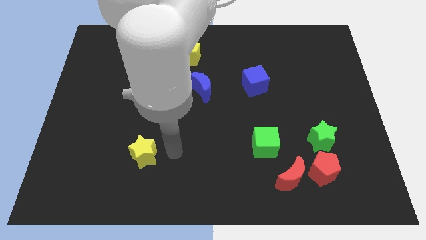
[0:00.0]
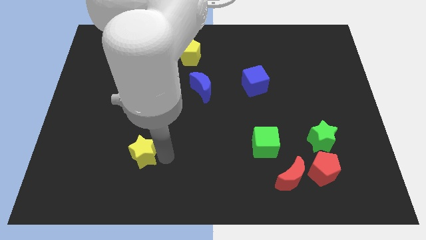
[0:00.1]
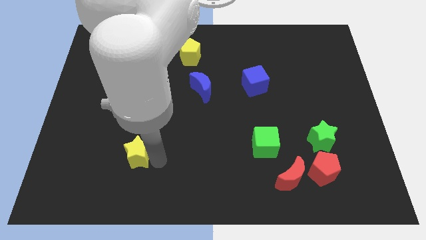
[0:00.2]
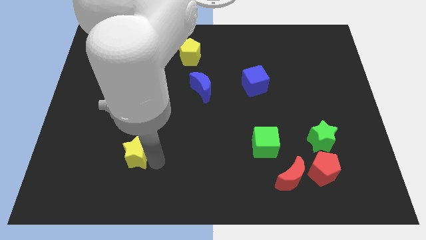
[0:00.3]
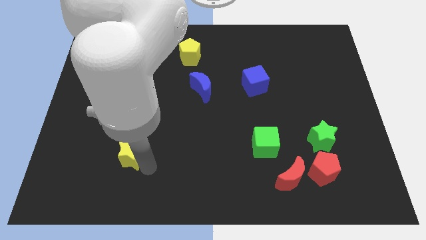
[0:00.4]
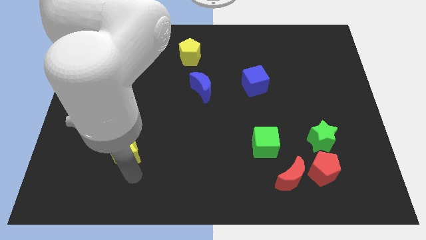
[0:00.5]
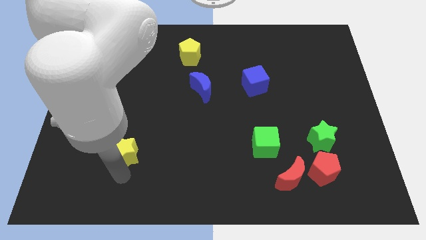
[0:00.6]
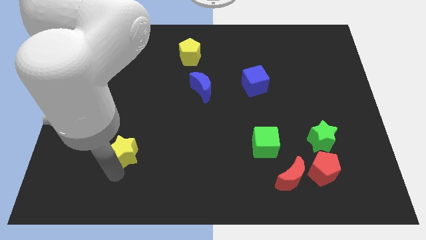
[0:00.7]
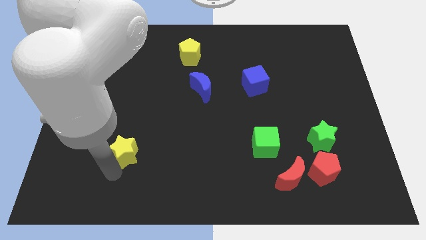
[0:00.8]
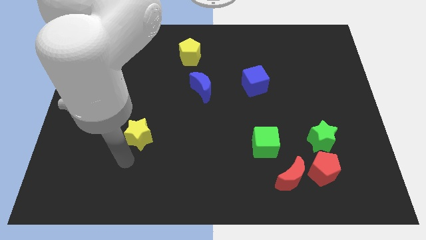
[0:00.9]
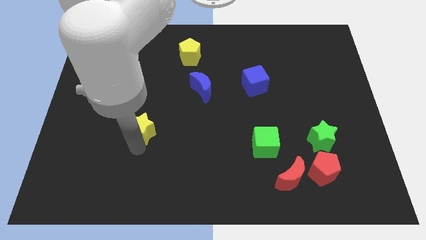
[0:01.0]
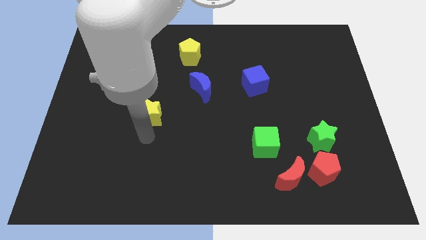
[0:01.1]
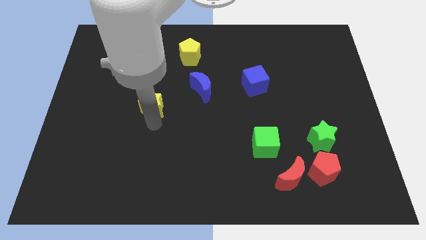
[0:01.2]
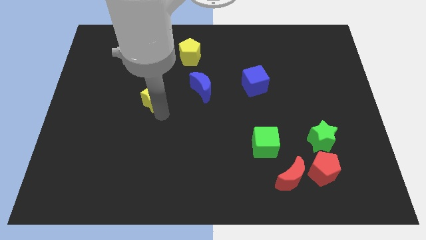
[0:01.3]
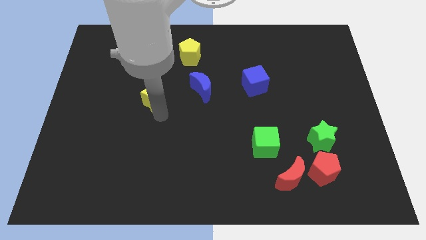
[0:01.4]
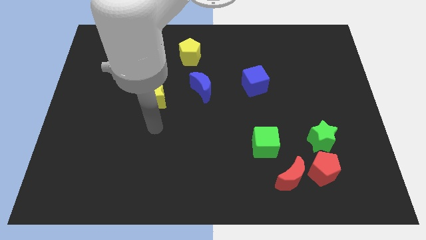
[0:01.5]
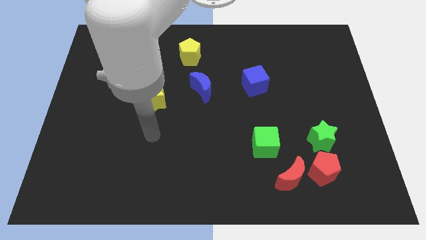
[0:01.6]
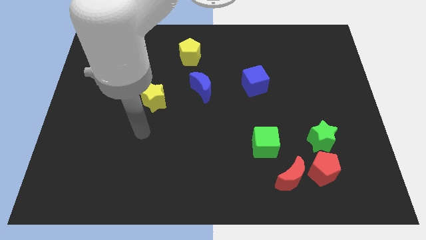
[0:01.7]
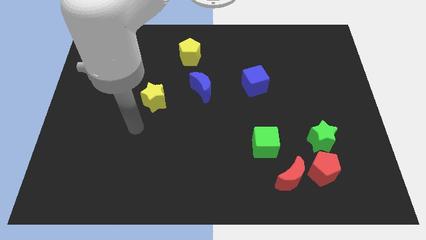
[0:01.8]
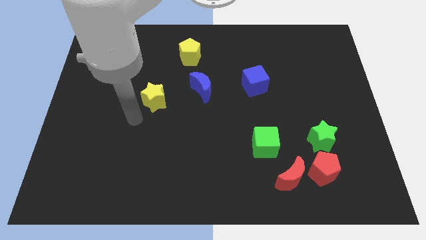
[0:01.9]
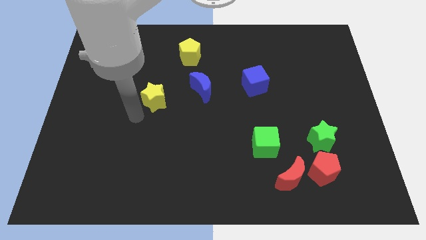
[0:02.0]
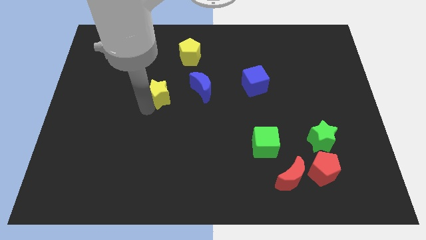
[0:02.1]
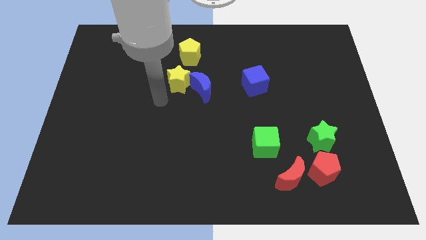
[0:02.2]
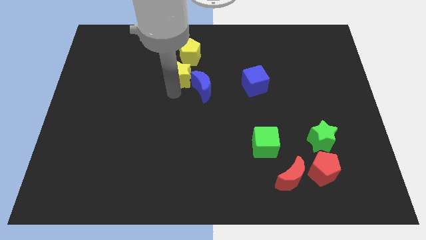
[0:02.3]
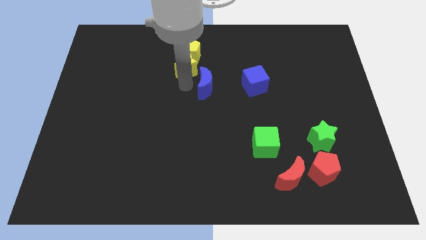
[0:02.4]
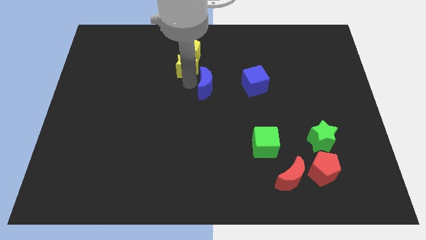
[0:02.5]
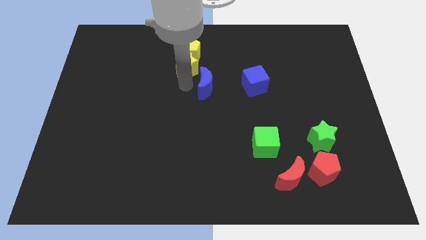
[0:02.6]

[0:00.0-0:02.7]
put the yellow star at the bottom of the yellow pentagon

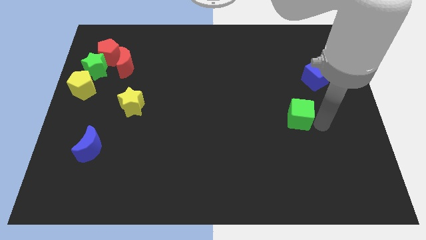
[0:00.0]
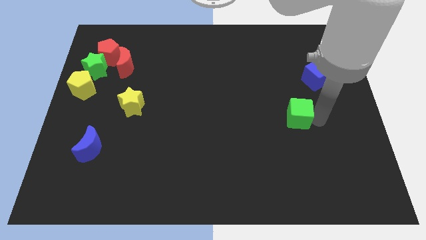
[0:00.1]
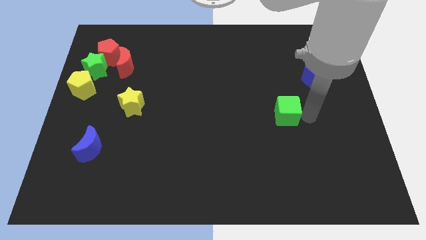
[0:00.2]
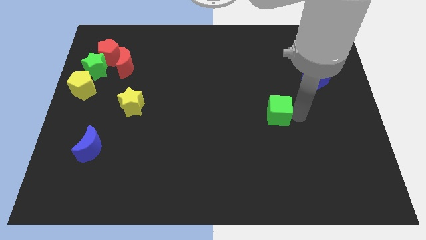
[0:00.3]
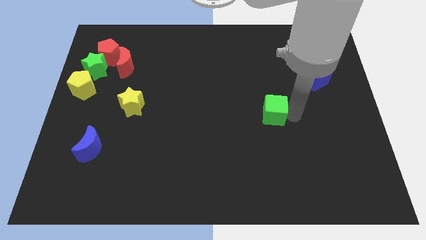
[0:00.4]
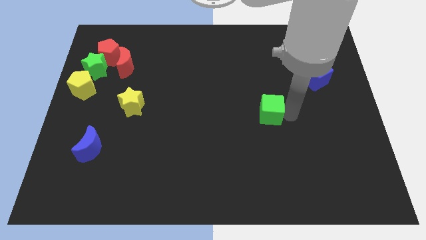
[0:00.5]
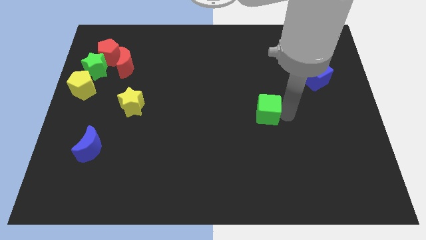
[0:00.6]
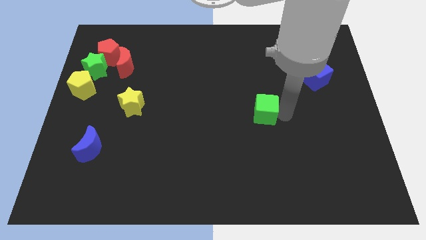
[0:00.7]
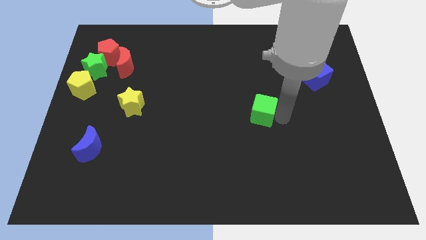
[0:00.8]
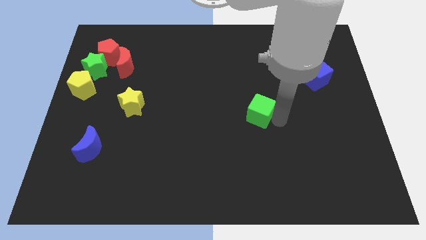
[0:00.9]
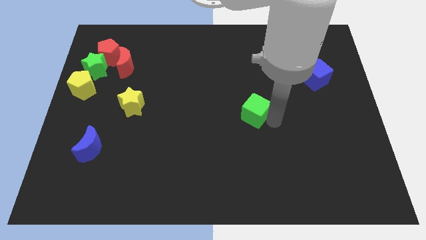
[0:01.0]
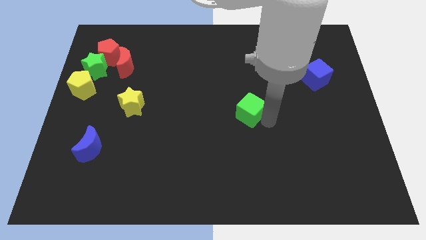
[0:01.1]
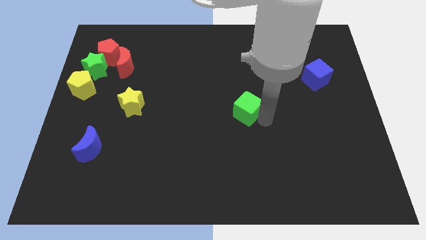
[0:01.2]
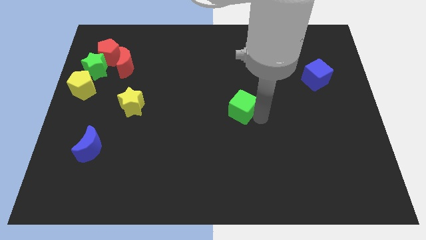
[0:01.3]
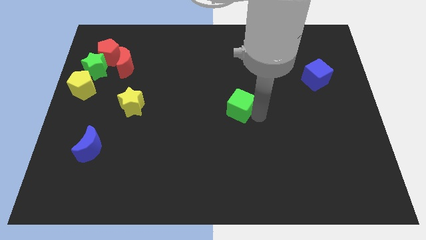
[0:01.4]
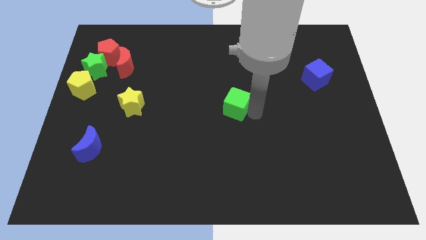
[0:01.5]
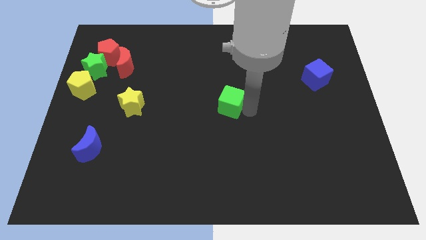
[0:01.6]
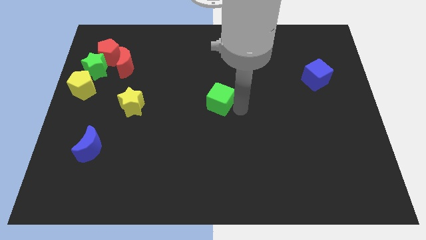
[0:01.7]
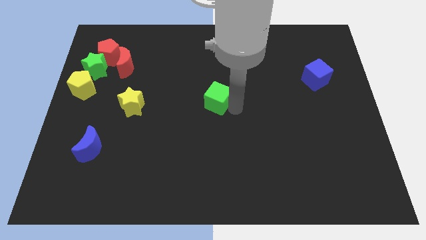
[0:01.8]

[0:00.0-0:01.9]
push the green cube to the center of the table

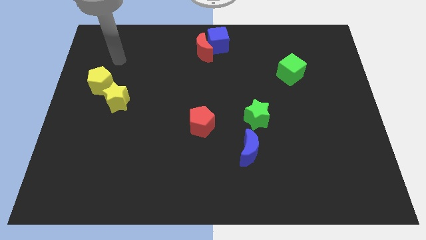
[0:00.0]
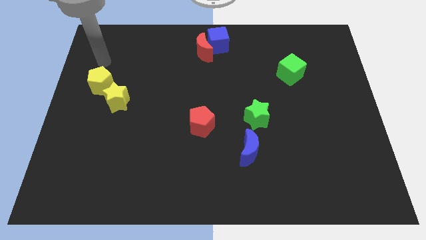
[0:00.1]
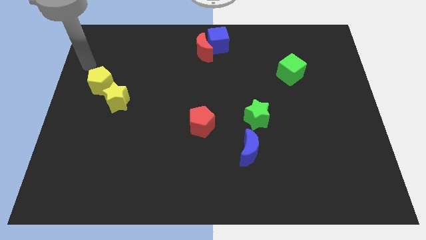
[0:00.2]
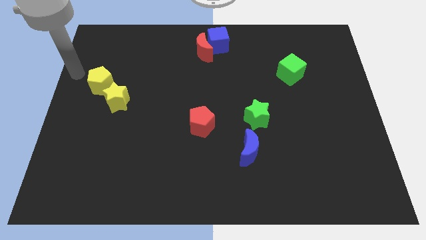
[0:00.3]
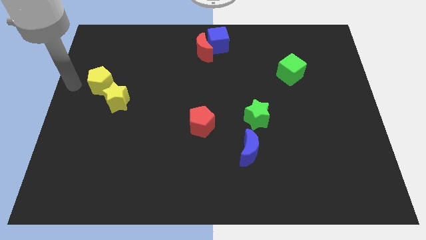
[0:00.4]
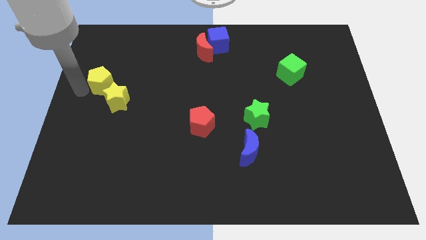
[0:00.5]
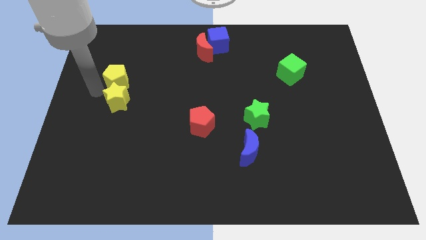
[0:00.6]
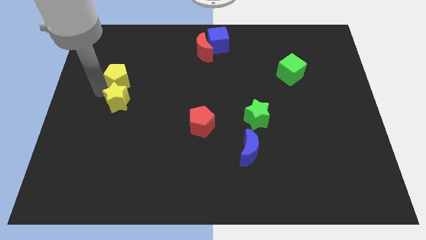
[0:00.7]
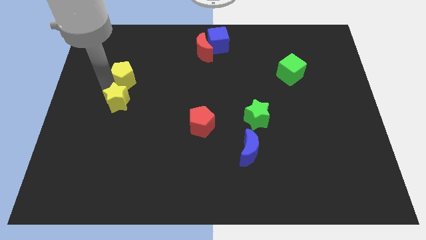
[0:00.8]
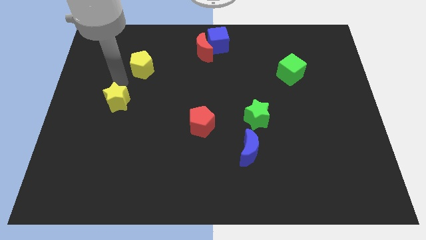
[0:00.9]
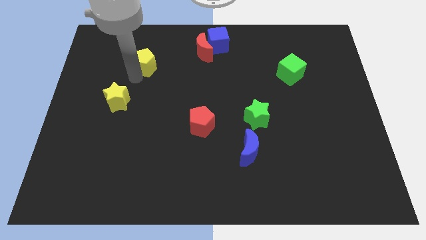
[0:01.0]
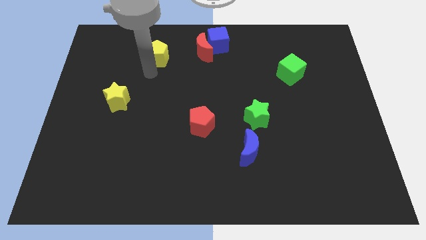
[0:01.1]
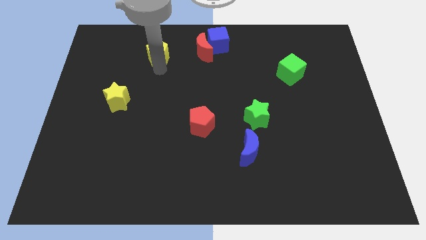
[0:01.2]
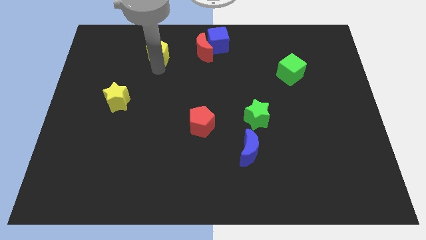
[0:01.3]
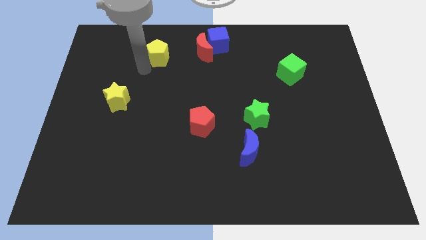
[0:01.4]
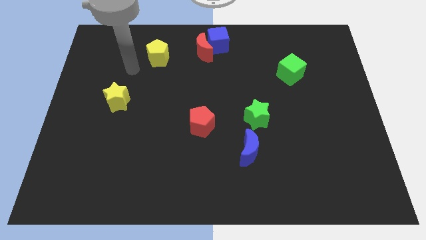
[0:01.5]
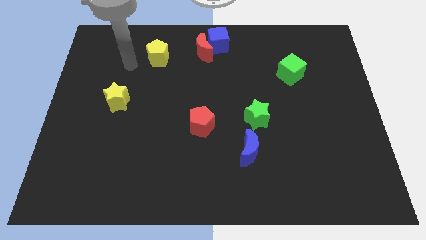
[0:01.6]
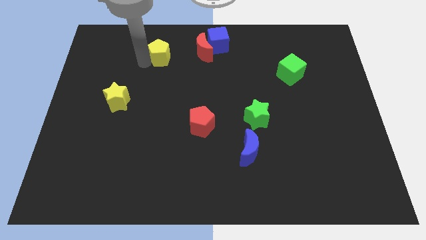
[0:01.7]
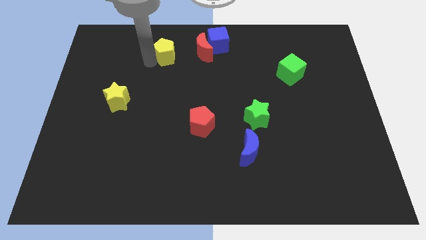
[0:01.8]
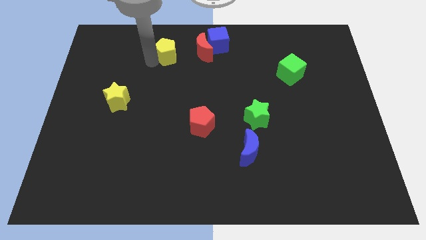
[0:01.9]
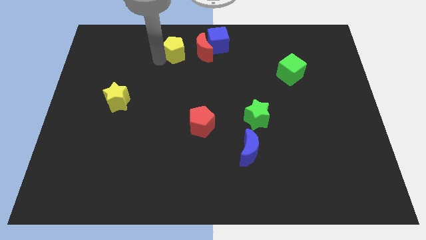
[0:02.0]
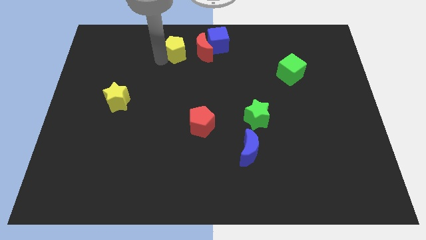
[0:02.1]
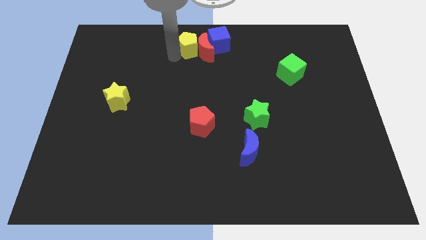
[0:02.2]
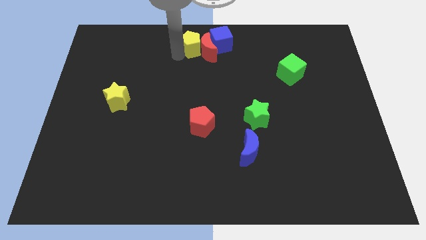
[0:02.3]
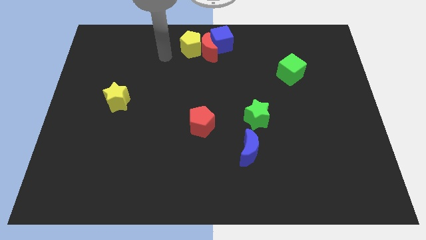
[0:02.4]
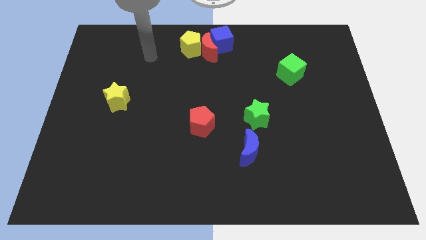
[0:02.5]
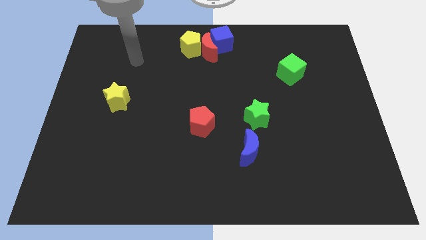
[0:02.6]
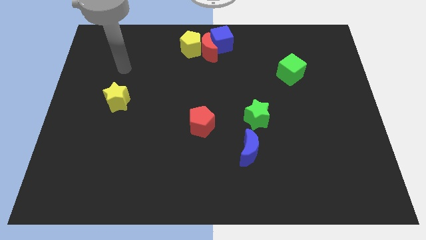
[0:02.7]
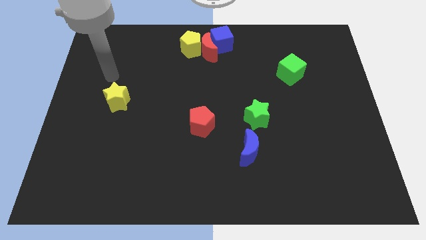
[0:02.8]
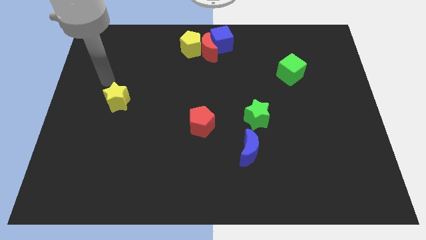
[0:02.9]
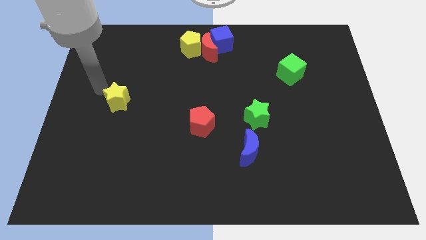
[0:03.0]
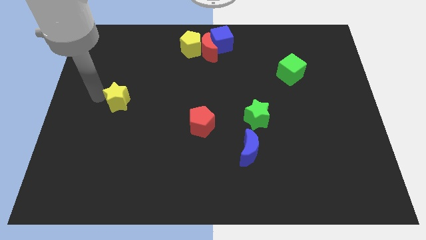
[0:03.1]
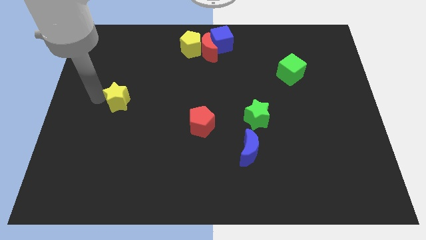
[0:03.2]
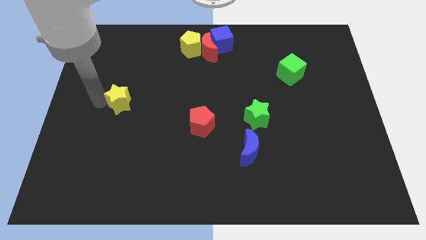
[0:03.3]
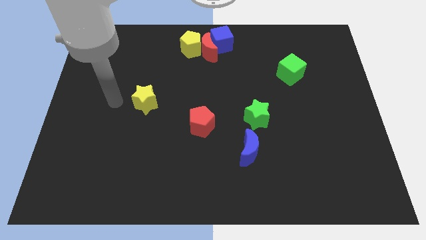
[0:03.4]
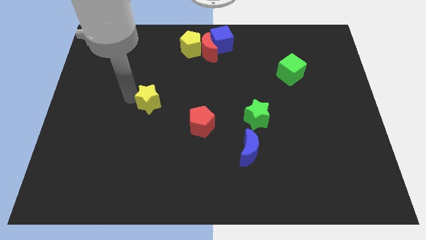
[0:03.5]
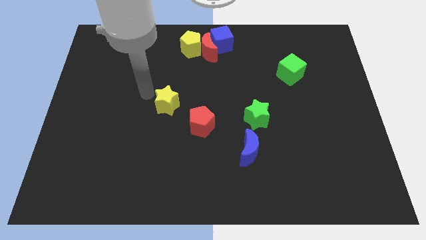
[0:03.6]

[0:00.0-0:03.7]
place the yellow pentagon to the left of the red crescent to form a horizontal line

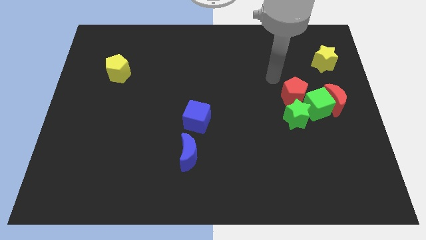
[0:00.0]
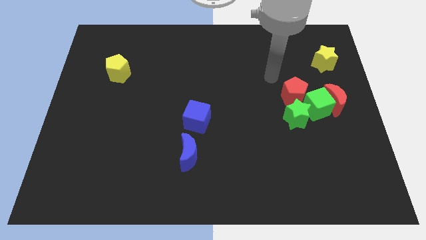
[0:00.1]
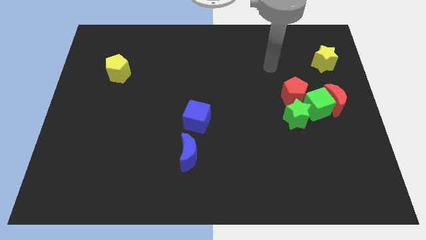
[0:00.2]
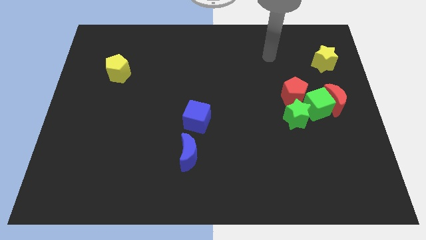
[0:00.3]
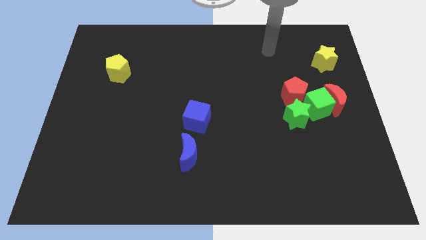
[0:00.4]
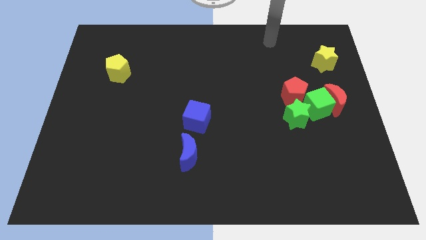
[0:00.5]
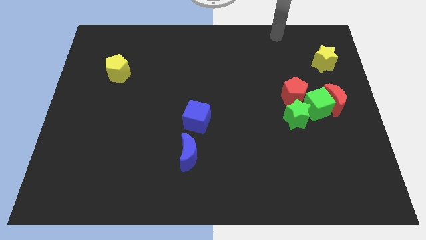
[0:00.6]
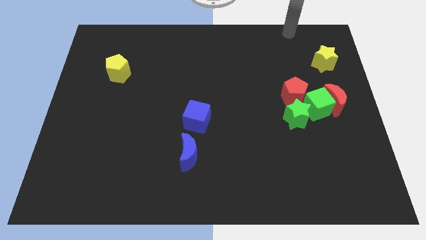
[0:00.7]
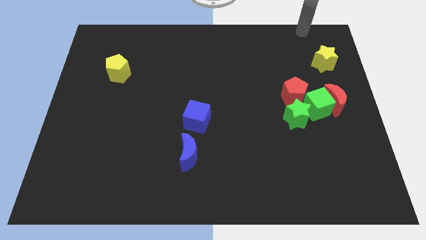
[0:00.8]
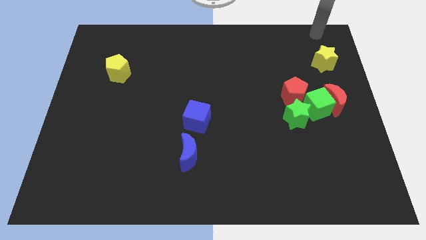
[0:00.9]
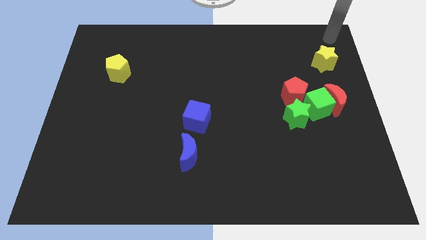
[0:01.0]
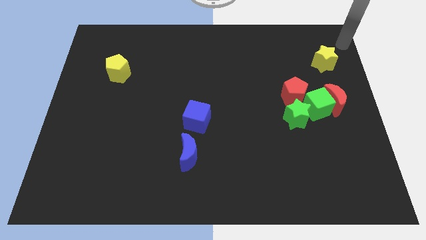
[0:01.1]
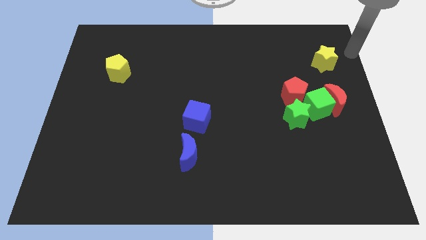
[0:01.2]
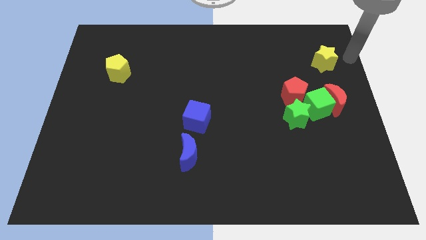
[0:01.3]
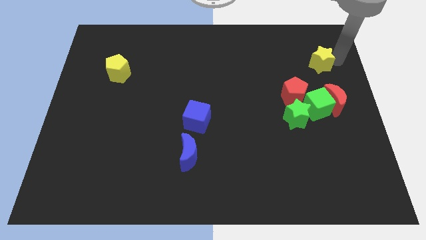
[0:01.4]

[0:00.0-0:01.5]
tap the yellow star
